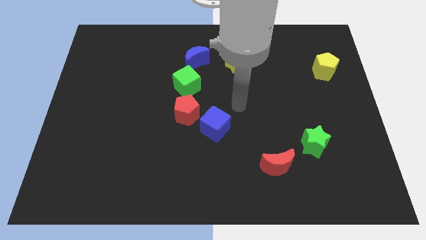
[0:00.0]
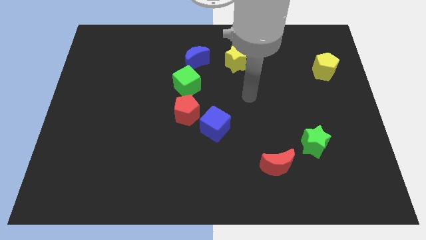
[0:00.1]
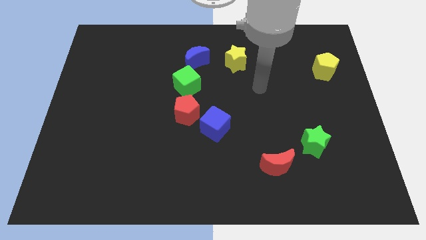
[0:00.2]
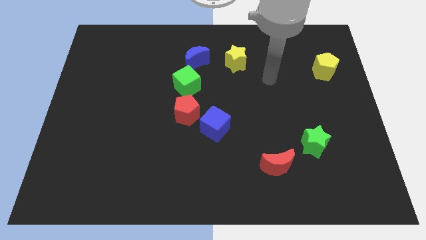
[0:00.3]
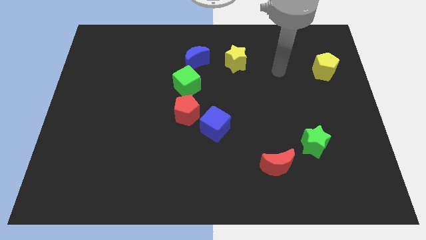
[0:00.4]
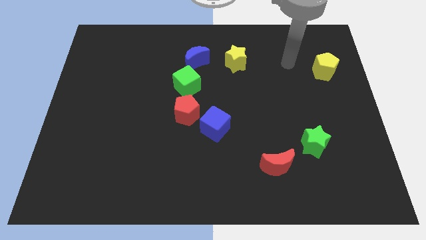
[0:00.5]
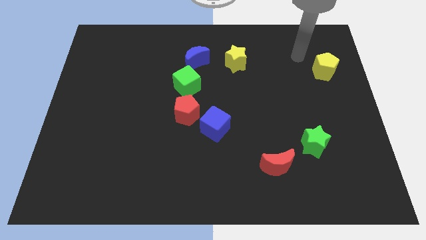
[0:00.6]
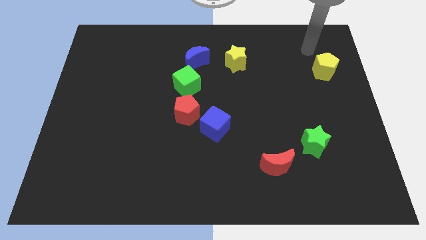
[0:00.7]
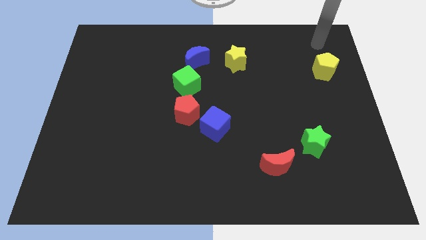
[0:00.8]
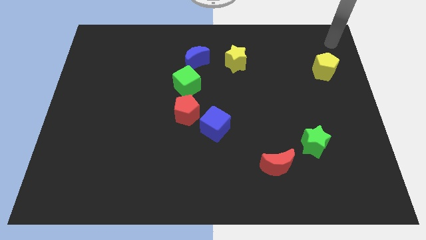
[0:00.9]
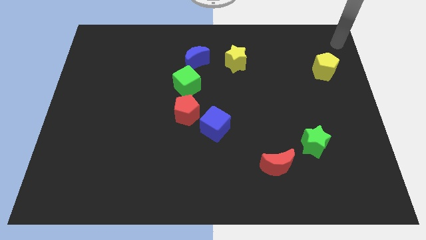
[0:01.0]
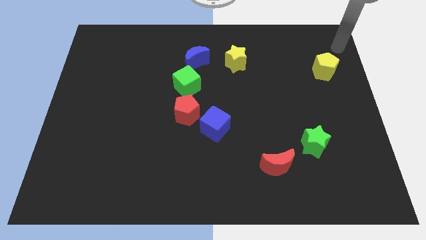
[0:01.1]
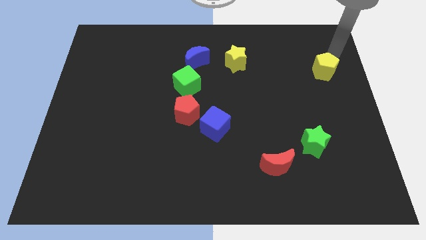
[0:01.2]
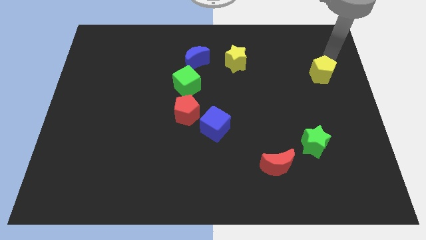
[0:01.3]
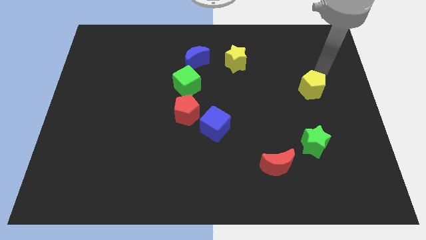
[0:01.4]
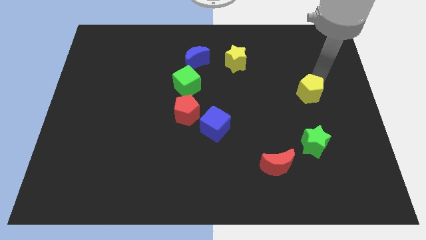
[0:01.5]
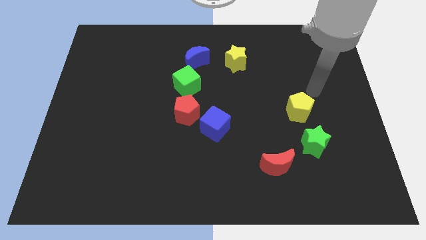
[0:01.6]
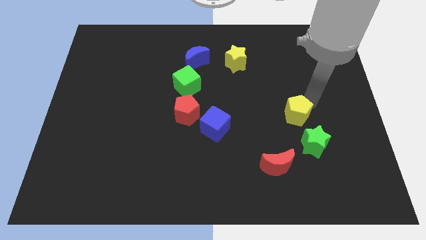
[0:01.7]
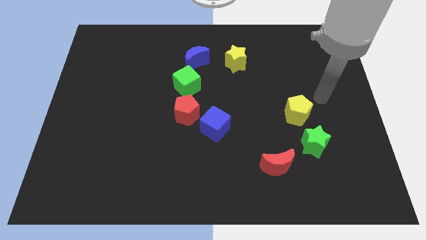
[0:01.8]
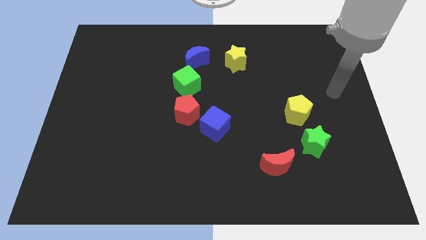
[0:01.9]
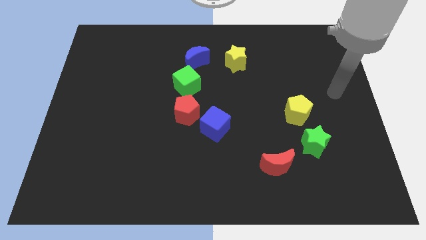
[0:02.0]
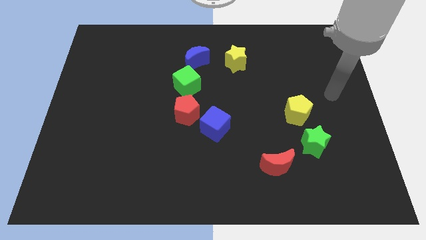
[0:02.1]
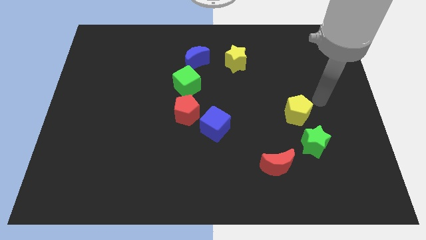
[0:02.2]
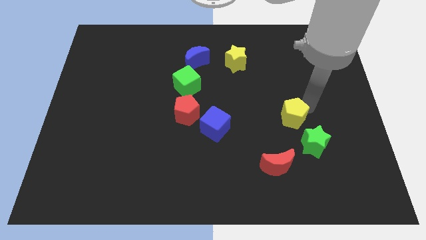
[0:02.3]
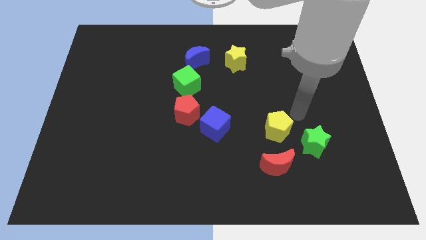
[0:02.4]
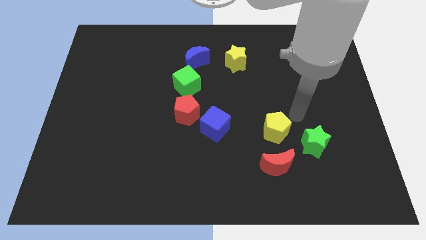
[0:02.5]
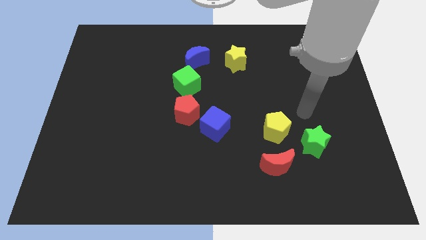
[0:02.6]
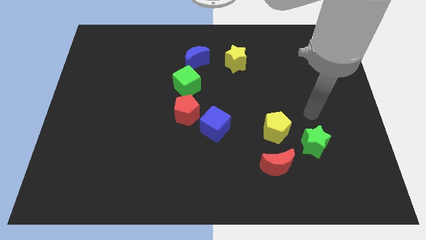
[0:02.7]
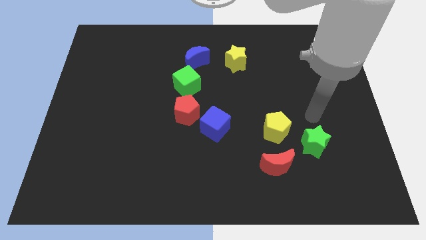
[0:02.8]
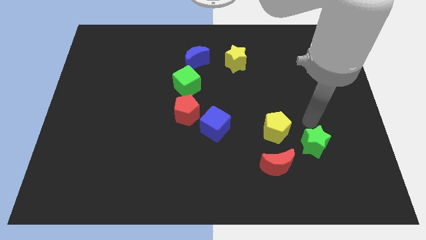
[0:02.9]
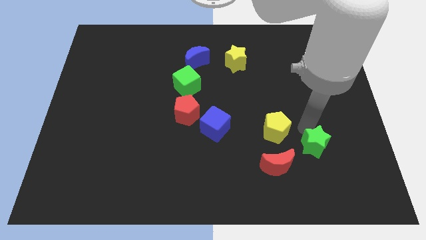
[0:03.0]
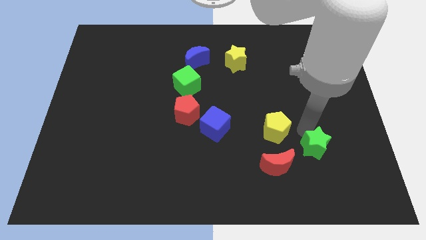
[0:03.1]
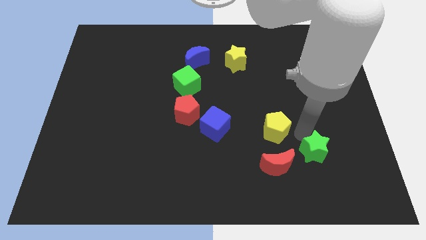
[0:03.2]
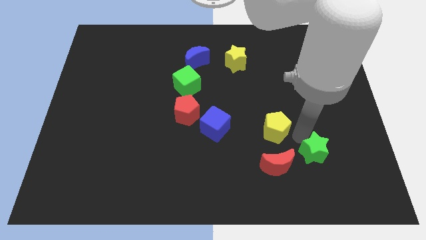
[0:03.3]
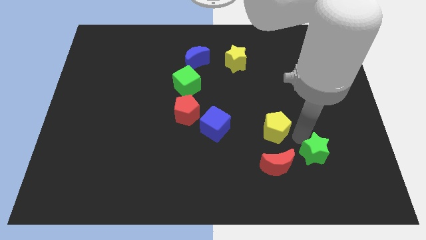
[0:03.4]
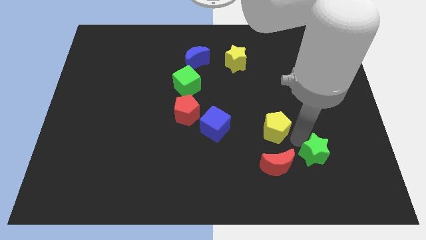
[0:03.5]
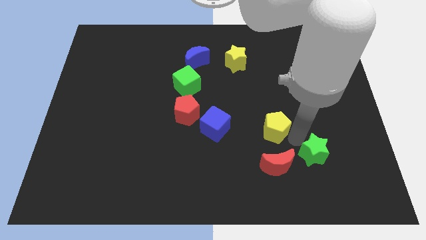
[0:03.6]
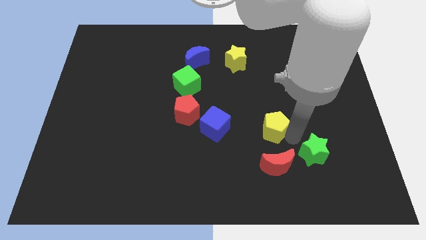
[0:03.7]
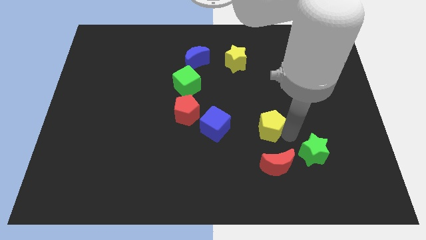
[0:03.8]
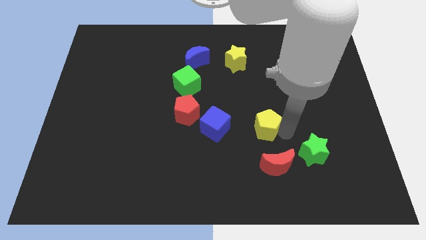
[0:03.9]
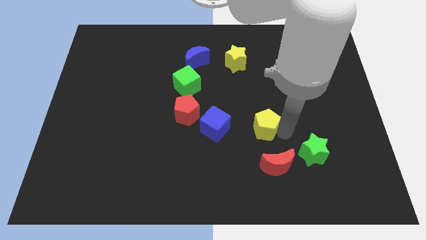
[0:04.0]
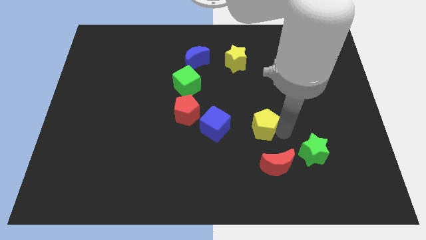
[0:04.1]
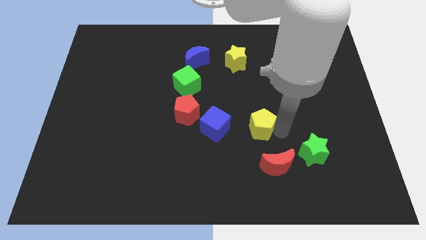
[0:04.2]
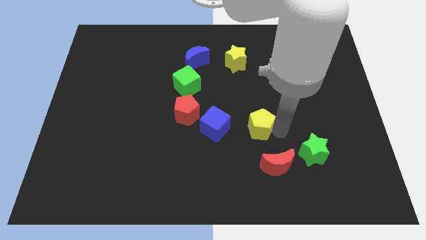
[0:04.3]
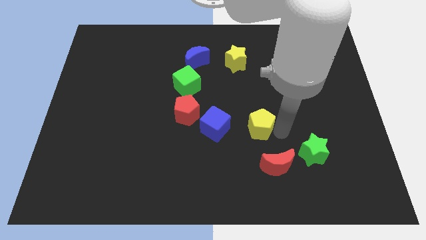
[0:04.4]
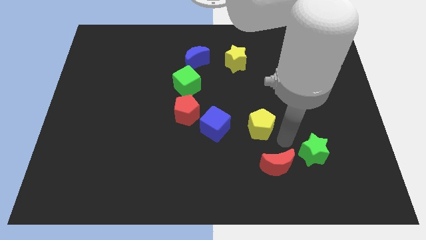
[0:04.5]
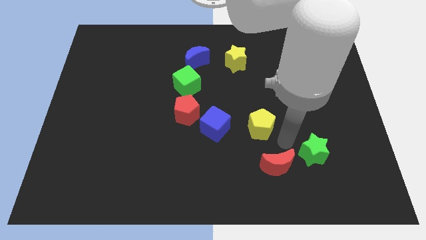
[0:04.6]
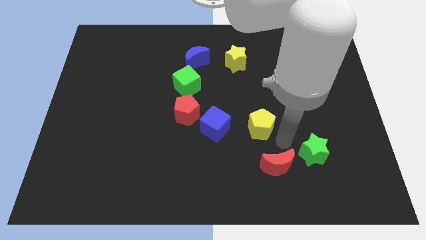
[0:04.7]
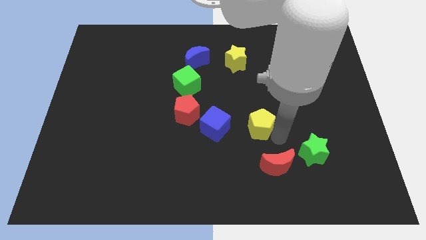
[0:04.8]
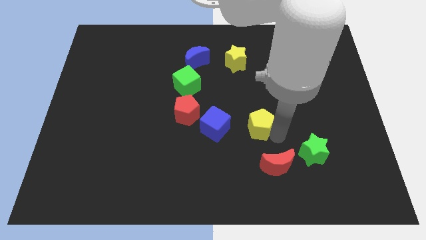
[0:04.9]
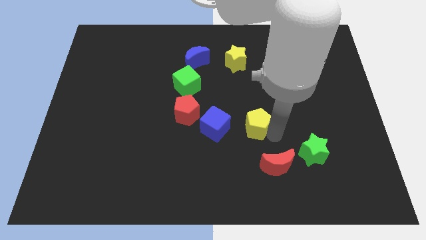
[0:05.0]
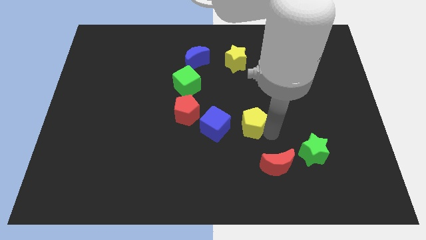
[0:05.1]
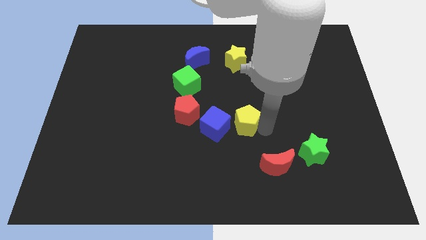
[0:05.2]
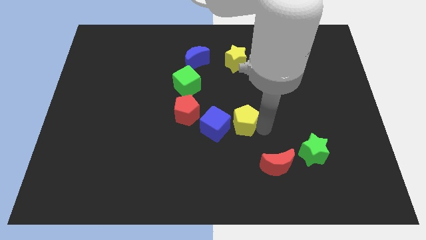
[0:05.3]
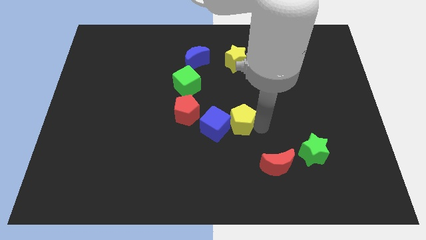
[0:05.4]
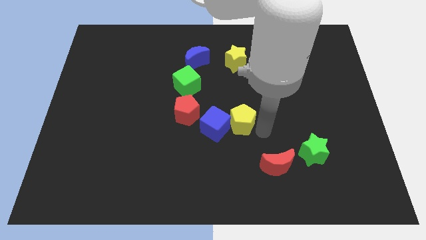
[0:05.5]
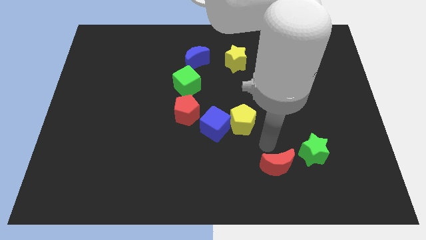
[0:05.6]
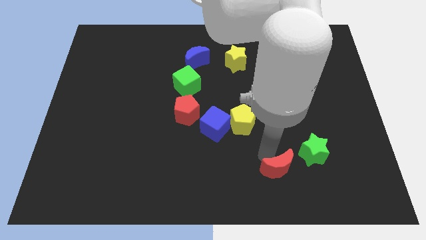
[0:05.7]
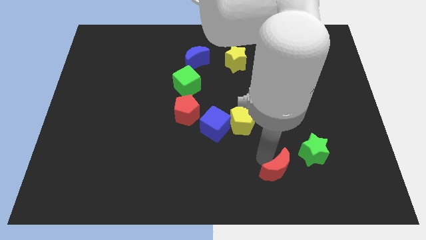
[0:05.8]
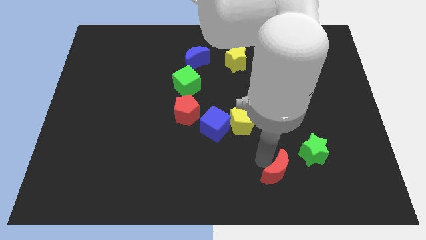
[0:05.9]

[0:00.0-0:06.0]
move the yellow pentagon into the blue cube

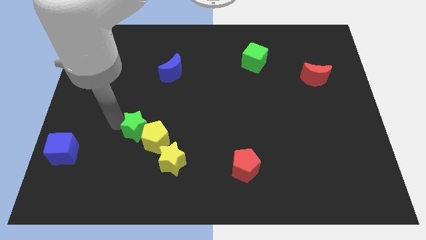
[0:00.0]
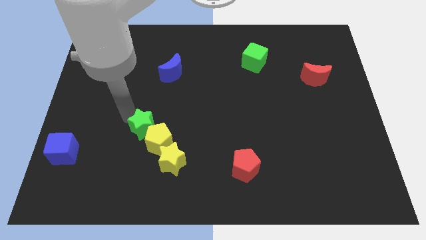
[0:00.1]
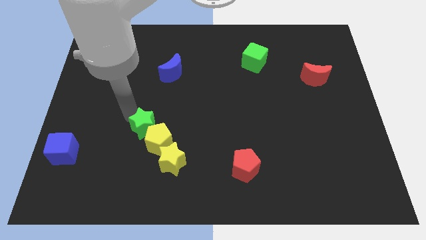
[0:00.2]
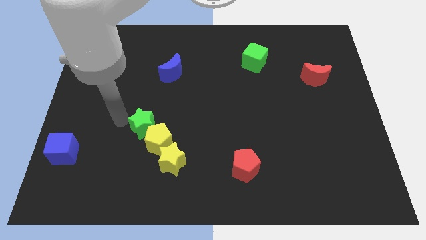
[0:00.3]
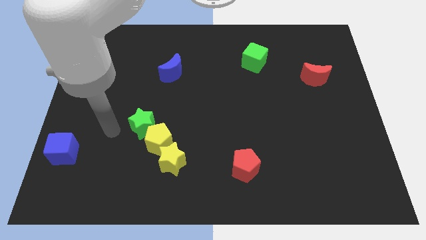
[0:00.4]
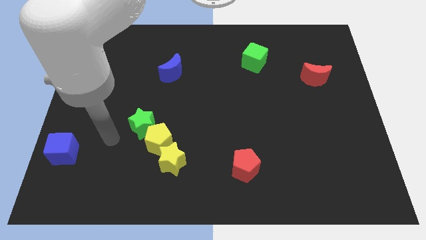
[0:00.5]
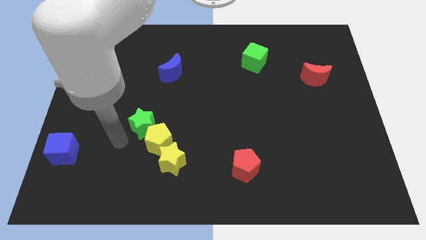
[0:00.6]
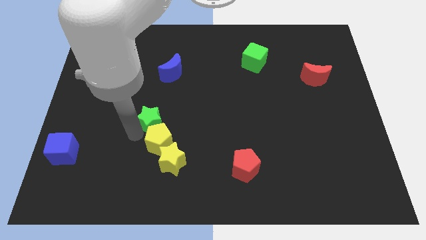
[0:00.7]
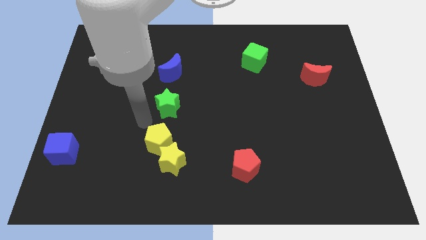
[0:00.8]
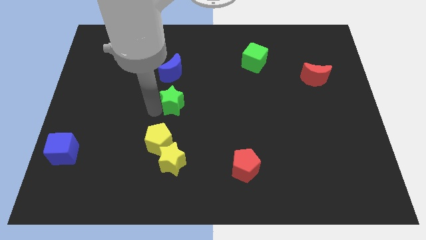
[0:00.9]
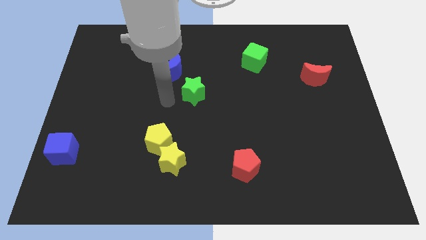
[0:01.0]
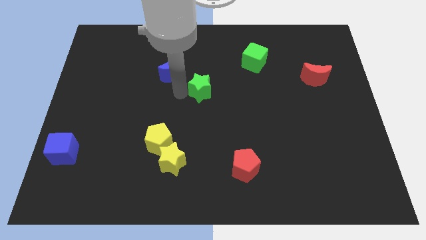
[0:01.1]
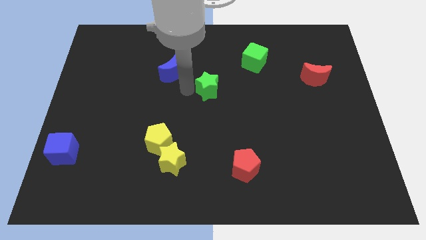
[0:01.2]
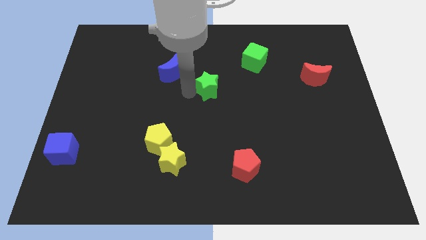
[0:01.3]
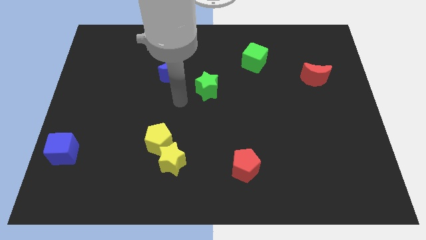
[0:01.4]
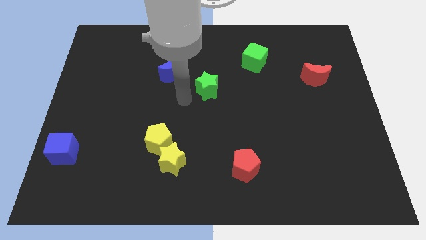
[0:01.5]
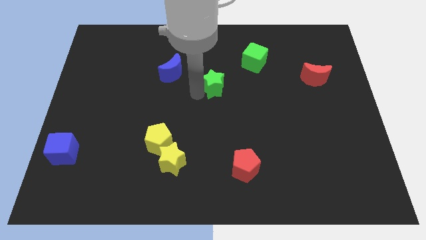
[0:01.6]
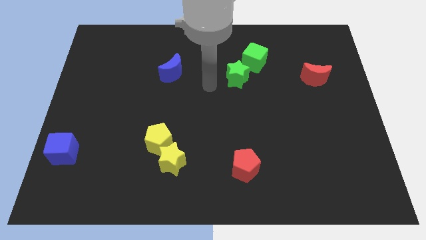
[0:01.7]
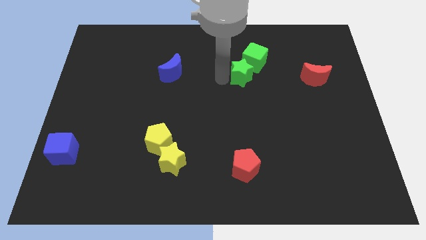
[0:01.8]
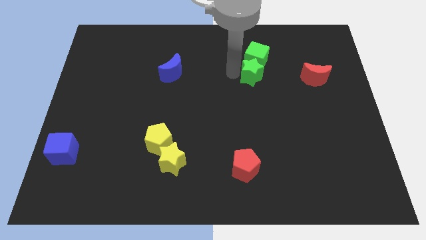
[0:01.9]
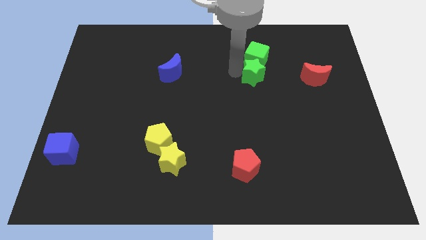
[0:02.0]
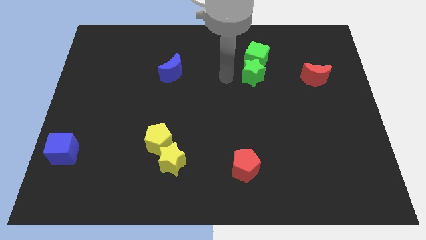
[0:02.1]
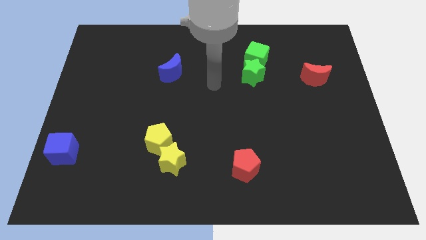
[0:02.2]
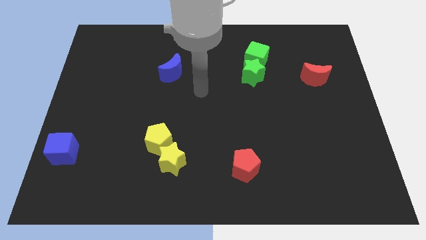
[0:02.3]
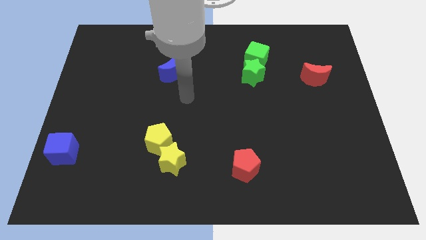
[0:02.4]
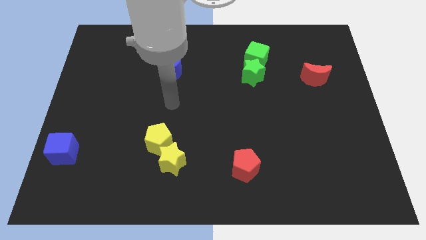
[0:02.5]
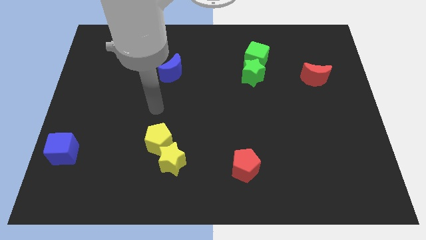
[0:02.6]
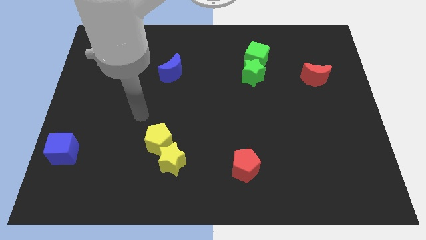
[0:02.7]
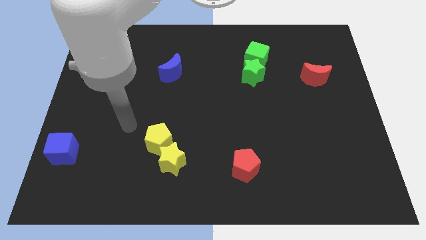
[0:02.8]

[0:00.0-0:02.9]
place the green star left to the red moon
